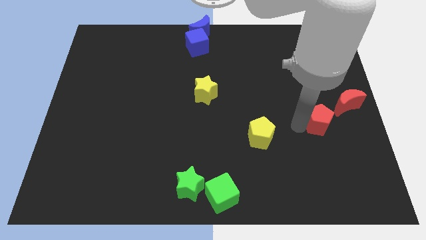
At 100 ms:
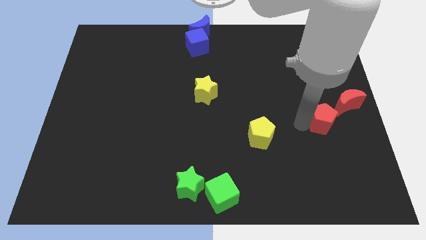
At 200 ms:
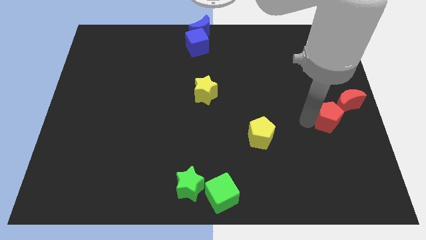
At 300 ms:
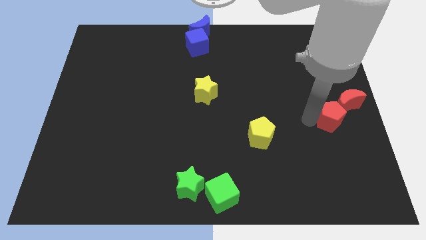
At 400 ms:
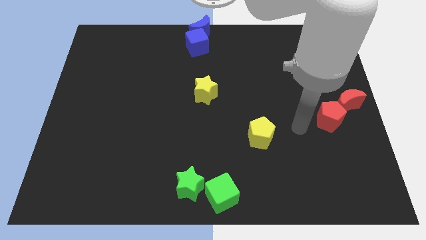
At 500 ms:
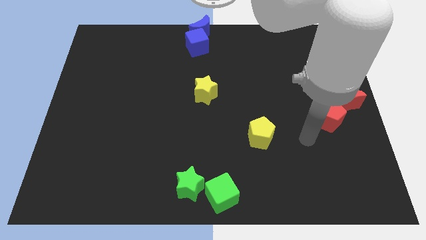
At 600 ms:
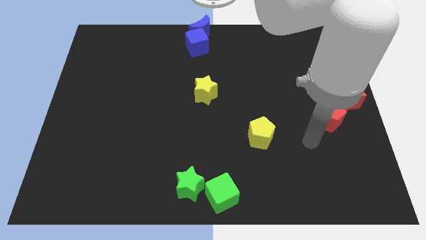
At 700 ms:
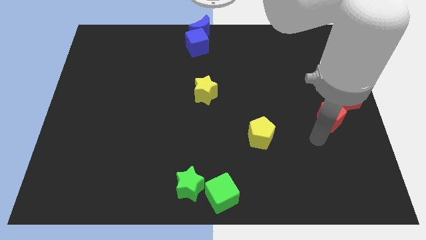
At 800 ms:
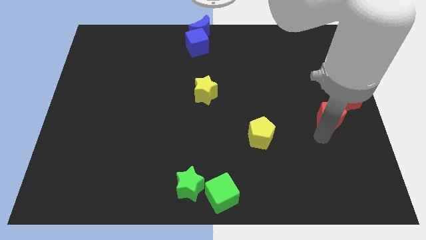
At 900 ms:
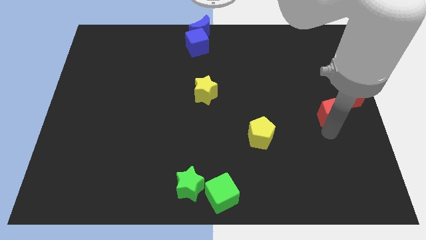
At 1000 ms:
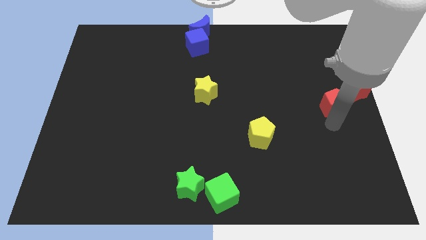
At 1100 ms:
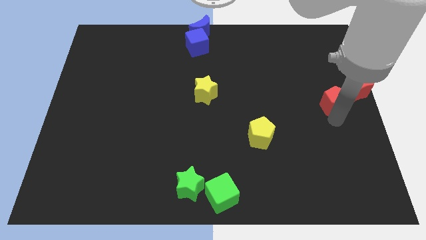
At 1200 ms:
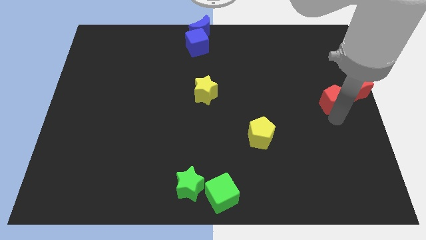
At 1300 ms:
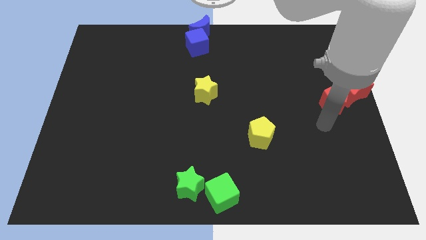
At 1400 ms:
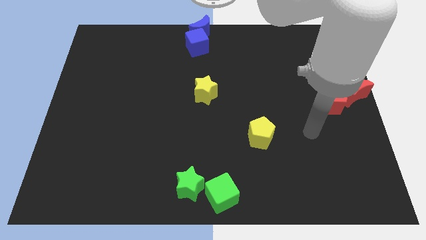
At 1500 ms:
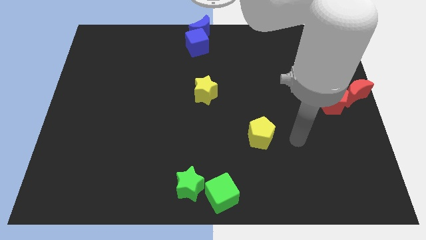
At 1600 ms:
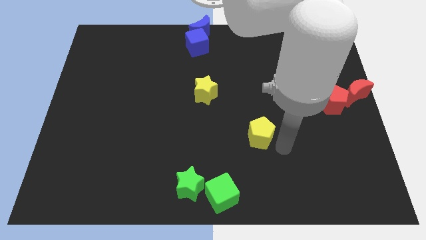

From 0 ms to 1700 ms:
move the red pentagon into the red moon

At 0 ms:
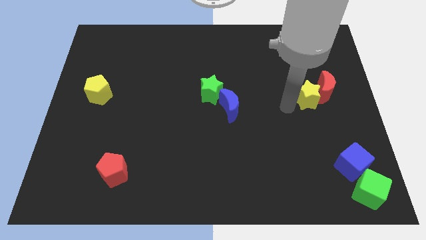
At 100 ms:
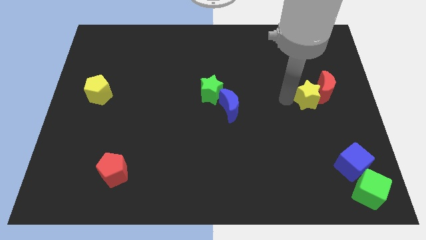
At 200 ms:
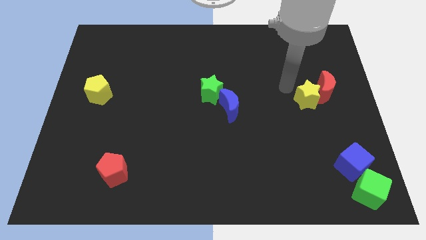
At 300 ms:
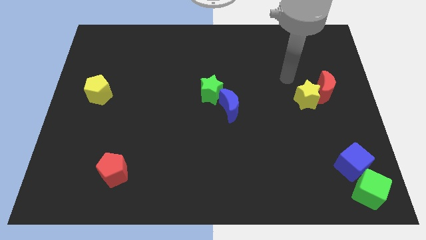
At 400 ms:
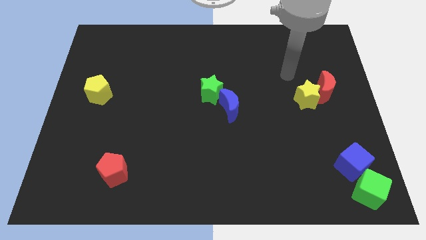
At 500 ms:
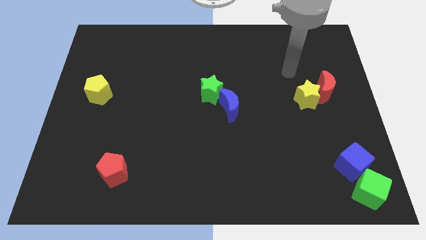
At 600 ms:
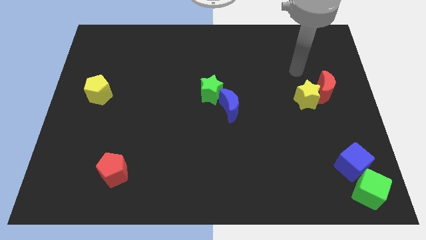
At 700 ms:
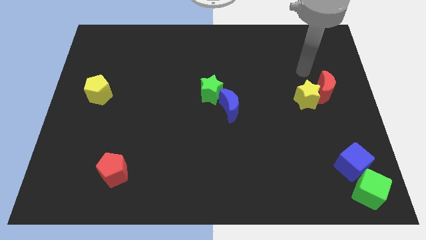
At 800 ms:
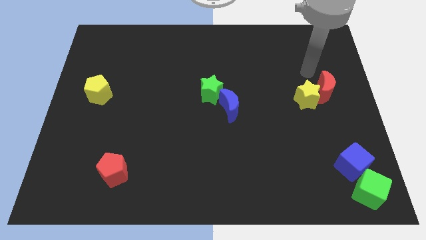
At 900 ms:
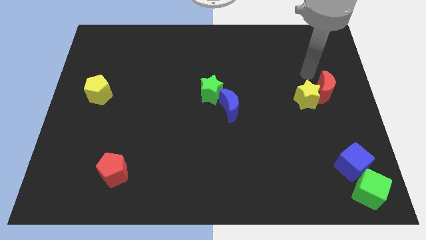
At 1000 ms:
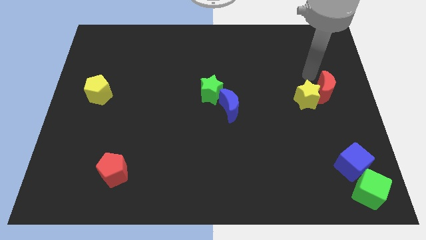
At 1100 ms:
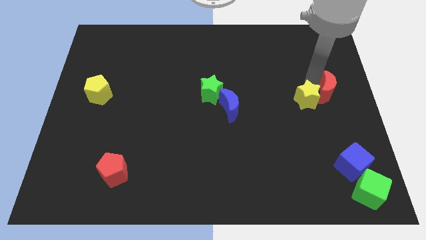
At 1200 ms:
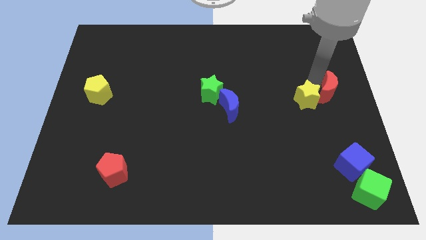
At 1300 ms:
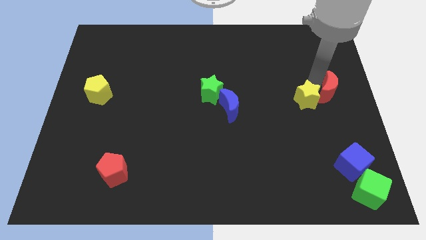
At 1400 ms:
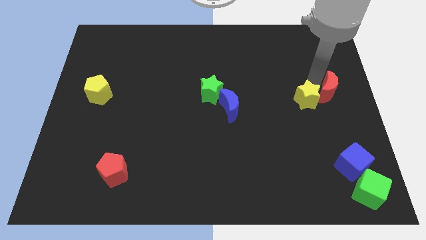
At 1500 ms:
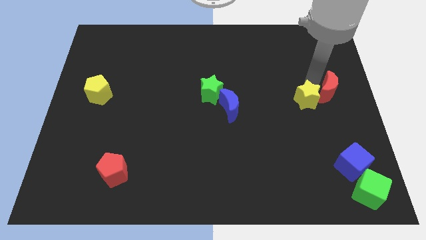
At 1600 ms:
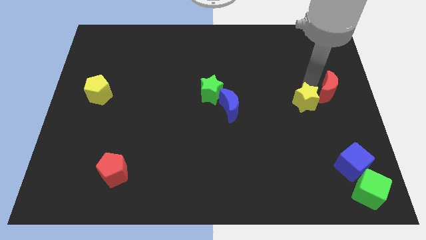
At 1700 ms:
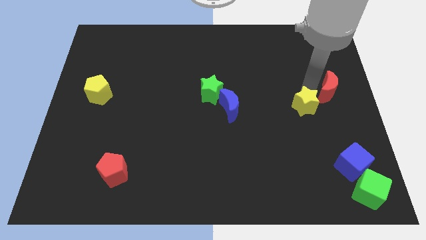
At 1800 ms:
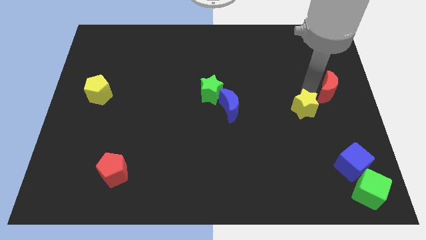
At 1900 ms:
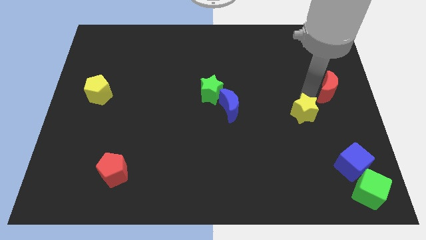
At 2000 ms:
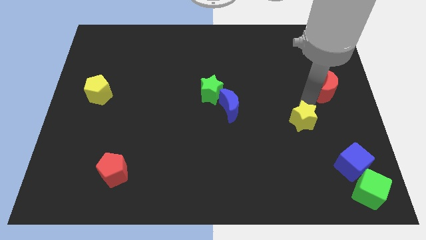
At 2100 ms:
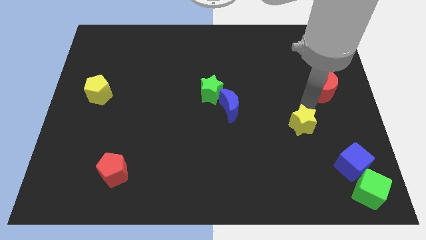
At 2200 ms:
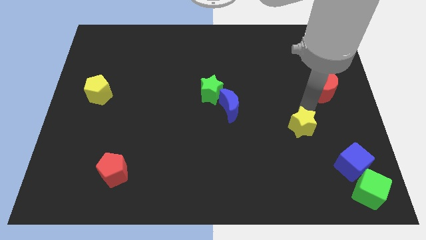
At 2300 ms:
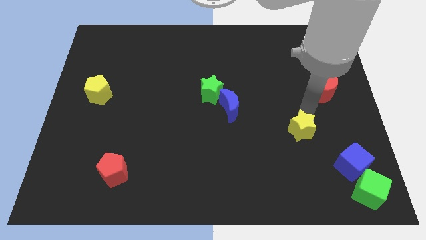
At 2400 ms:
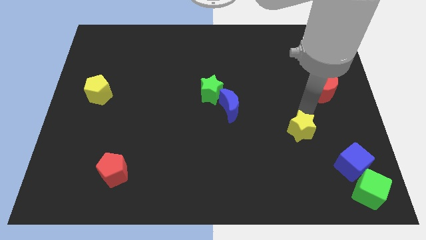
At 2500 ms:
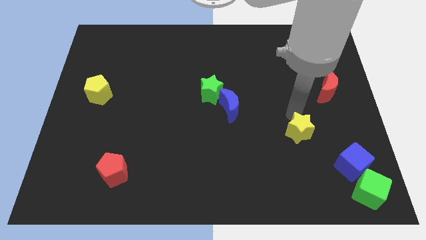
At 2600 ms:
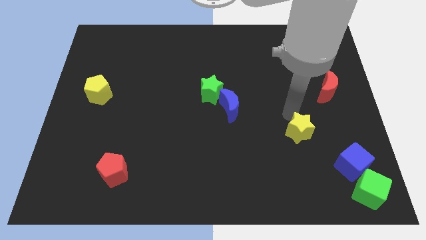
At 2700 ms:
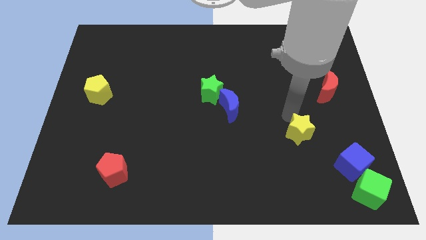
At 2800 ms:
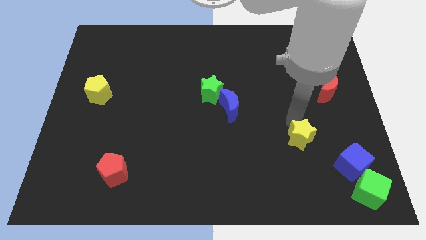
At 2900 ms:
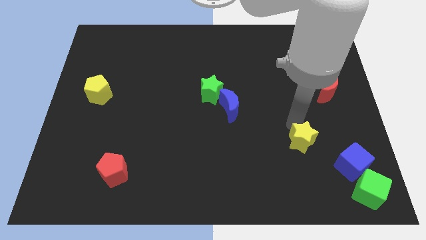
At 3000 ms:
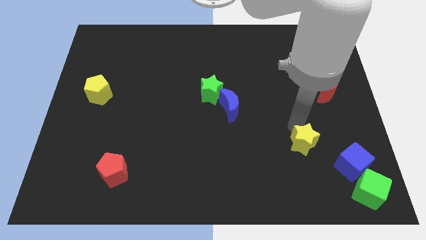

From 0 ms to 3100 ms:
separate yellow star from red moon

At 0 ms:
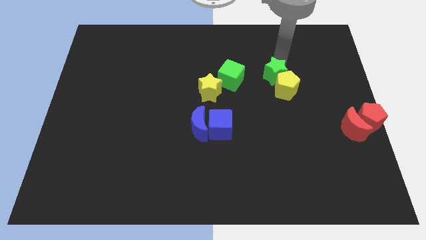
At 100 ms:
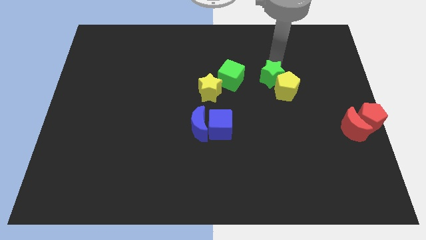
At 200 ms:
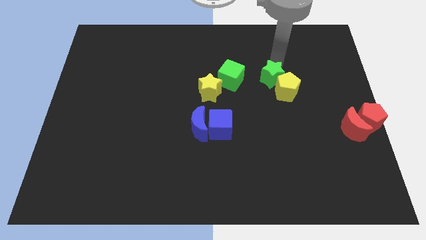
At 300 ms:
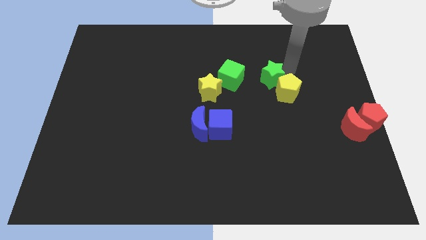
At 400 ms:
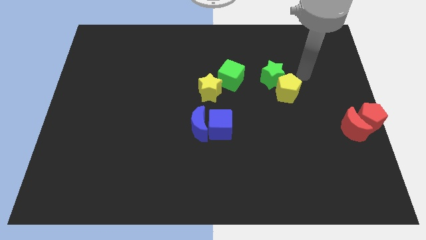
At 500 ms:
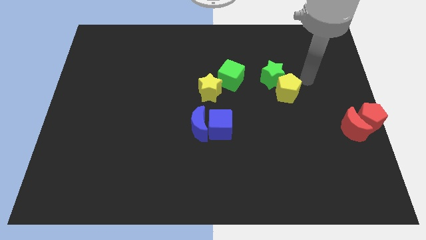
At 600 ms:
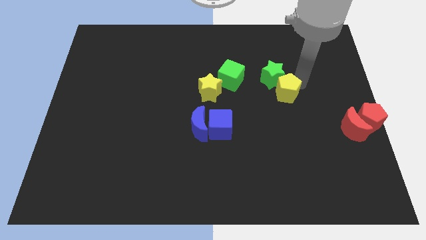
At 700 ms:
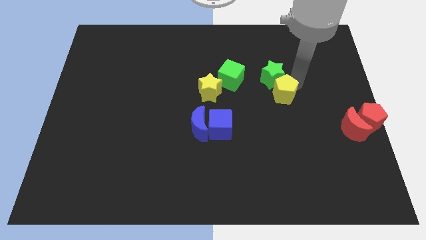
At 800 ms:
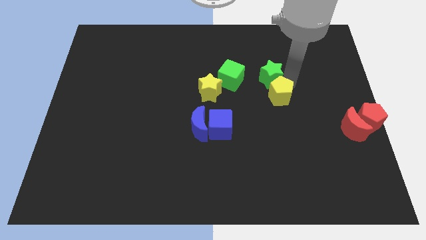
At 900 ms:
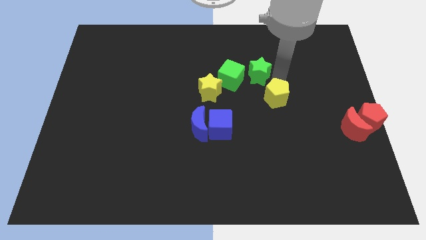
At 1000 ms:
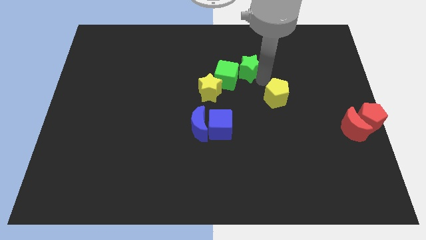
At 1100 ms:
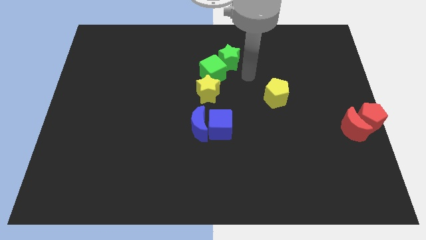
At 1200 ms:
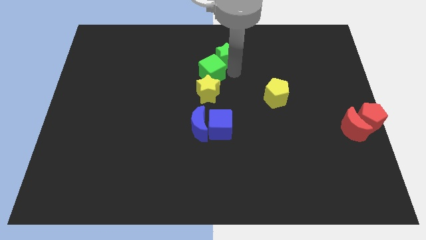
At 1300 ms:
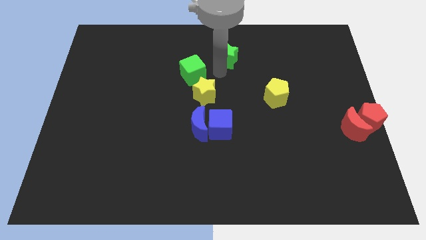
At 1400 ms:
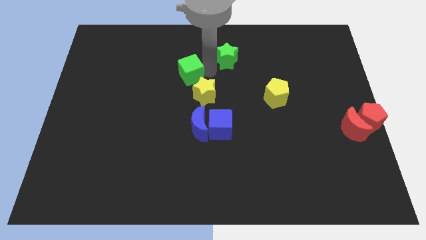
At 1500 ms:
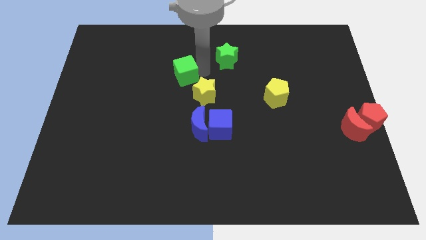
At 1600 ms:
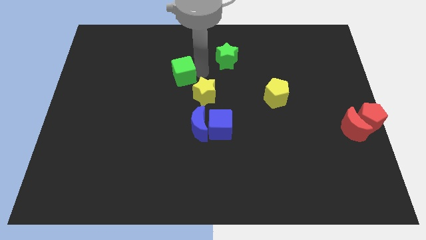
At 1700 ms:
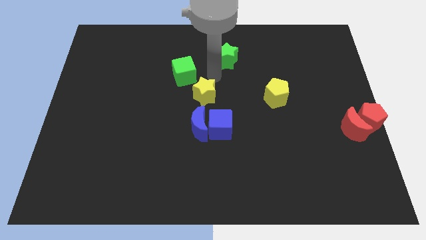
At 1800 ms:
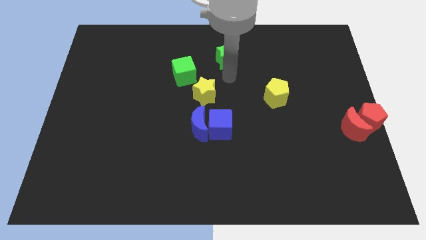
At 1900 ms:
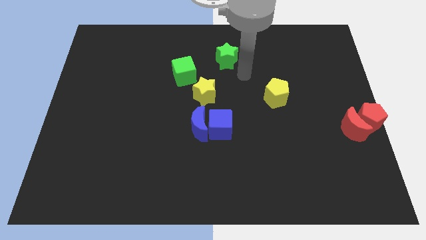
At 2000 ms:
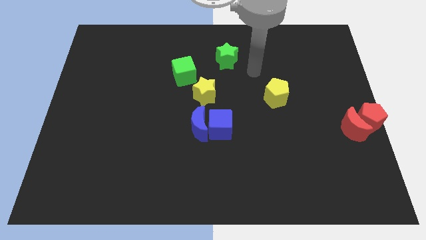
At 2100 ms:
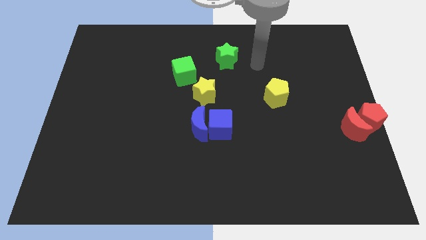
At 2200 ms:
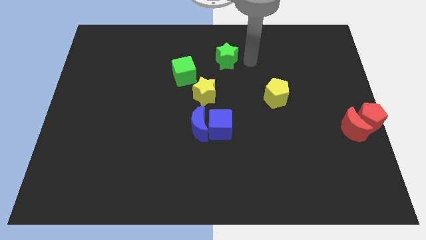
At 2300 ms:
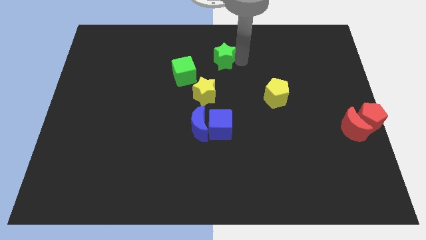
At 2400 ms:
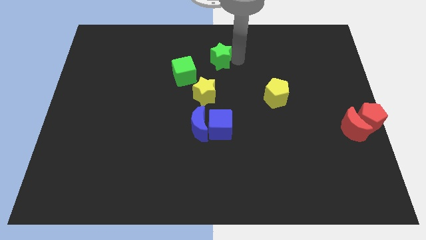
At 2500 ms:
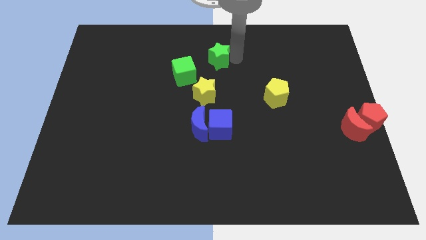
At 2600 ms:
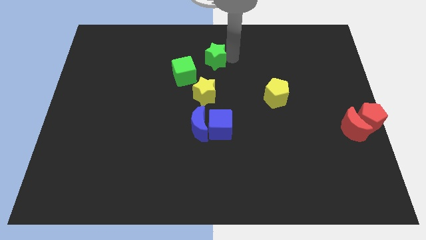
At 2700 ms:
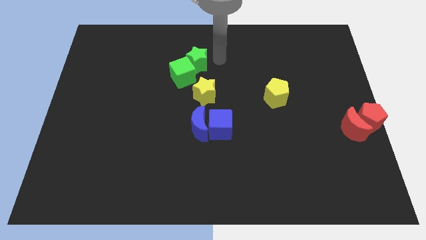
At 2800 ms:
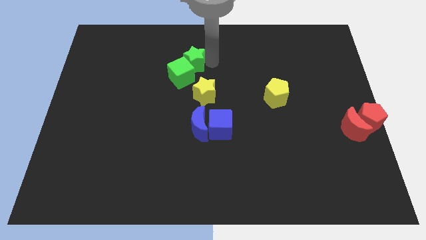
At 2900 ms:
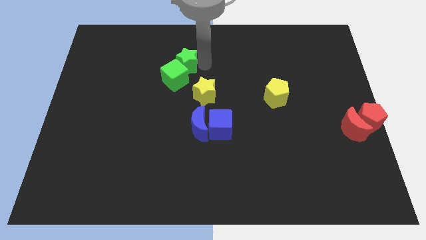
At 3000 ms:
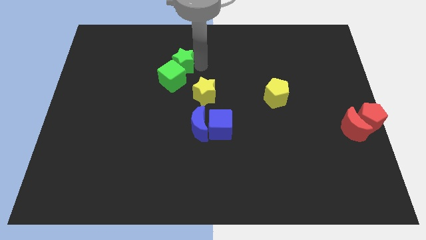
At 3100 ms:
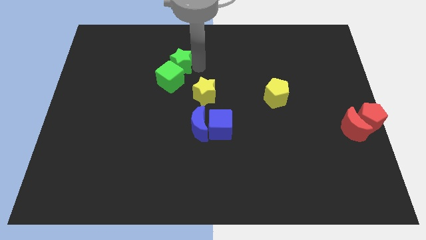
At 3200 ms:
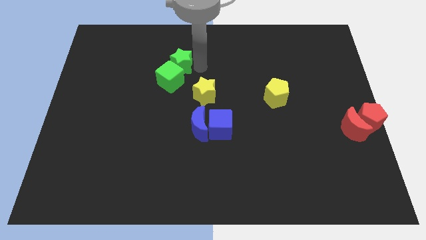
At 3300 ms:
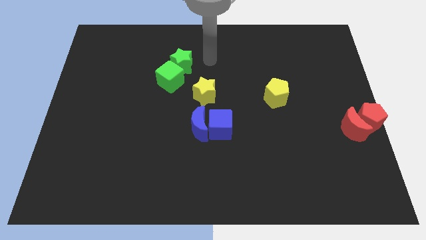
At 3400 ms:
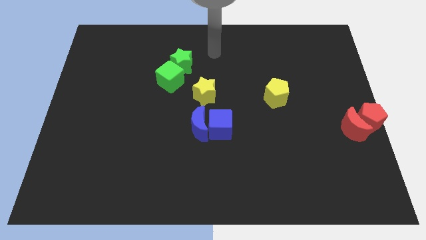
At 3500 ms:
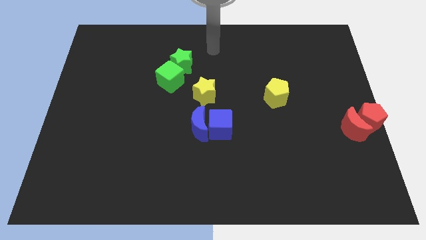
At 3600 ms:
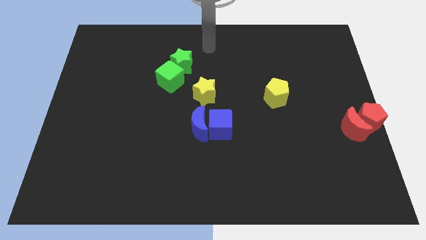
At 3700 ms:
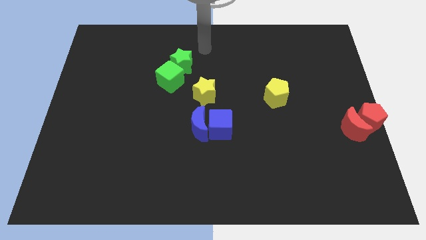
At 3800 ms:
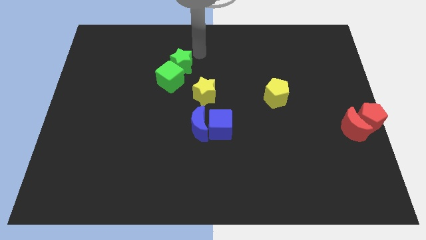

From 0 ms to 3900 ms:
move the green star into the top of the green cube

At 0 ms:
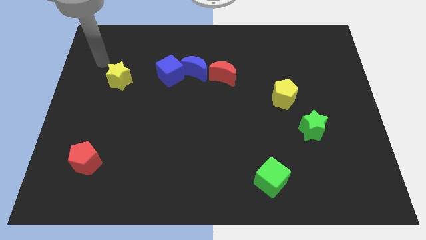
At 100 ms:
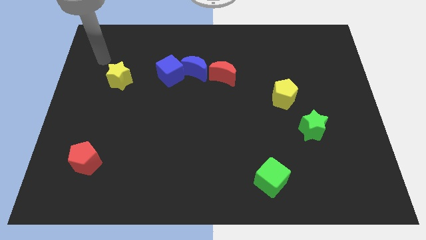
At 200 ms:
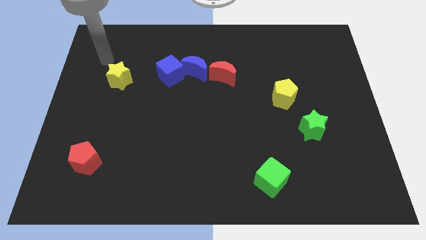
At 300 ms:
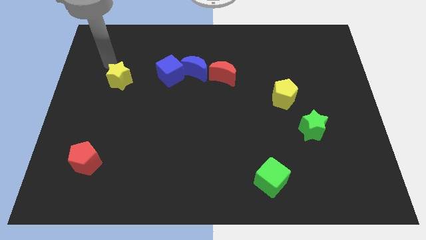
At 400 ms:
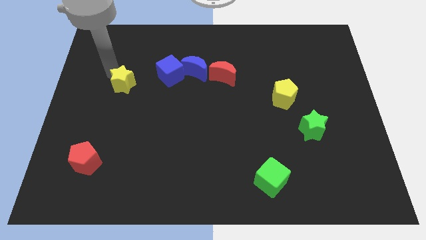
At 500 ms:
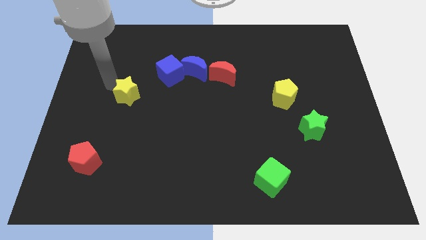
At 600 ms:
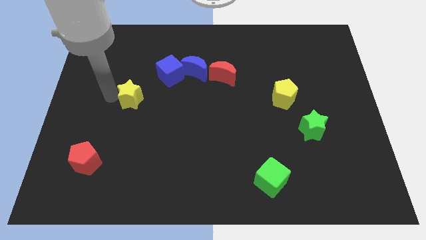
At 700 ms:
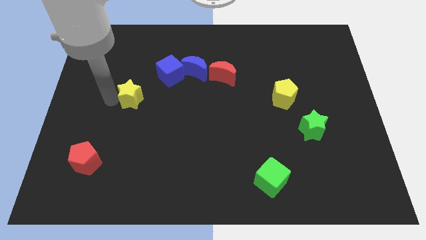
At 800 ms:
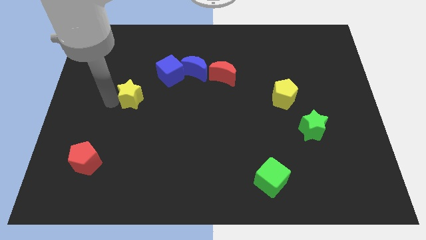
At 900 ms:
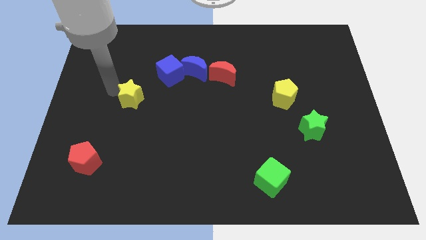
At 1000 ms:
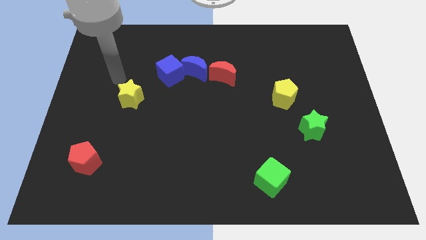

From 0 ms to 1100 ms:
put the yellow star parallel to the left of yellow pentagon
